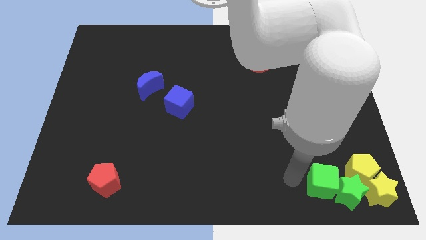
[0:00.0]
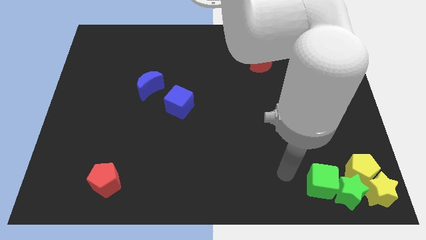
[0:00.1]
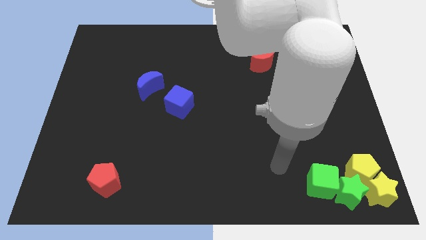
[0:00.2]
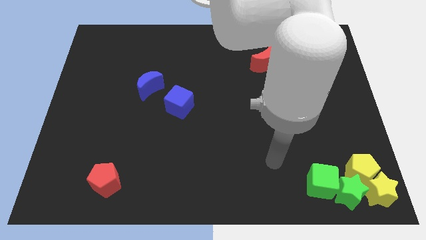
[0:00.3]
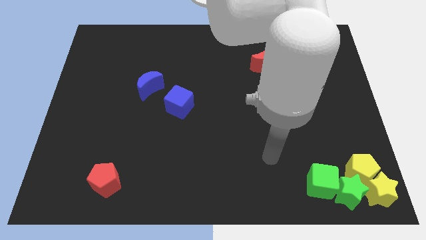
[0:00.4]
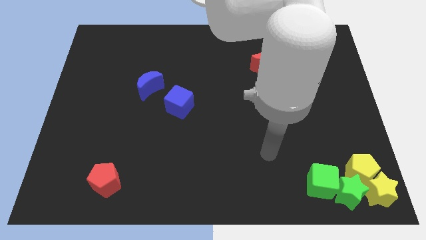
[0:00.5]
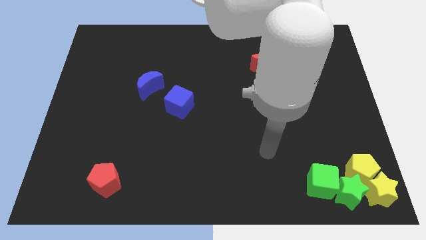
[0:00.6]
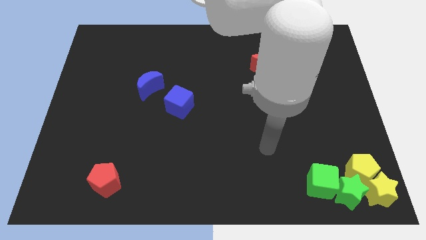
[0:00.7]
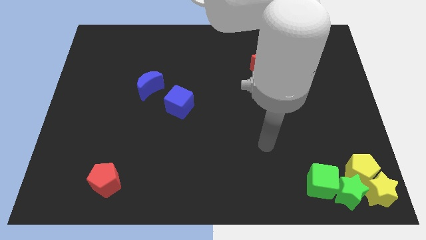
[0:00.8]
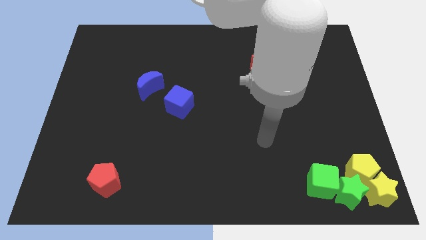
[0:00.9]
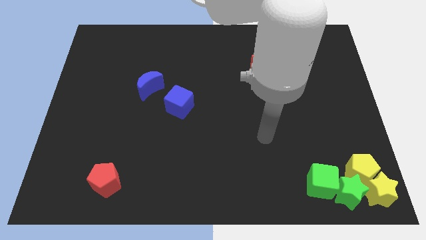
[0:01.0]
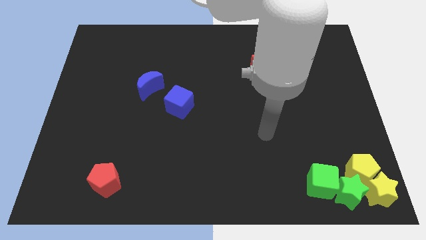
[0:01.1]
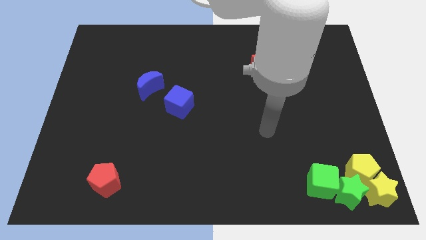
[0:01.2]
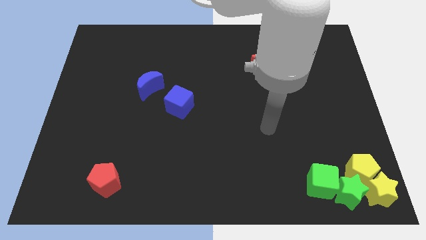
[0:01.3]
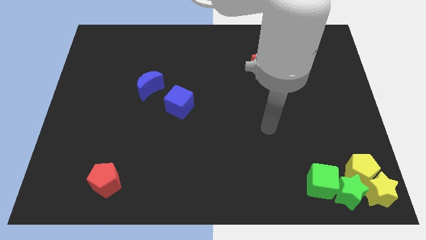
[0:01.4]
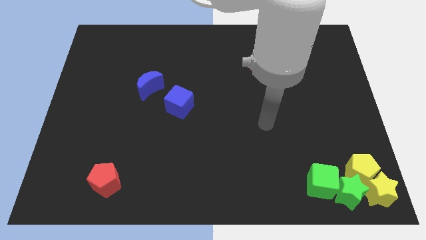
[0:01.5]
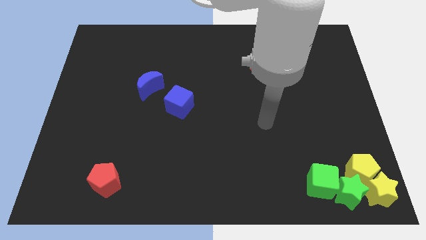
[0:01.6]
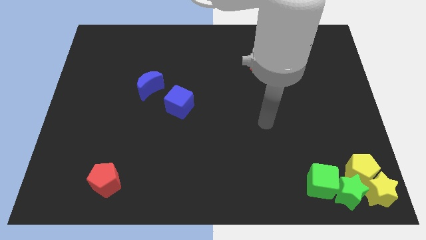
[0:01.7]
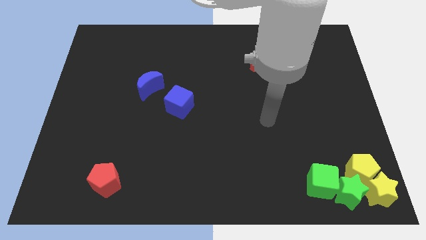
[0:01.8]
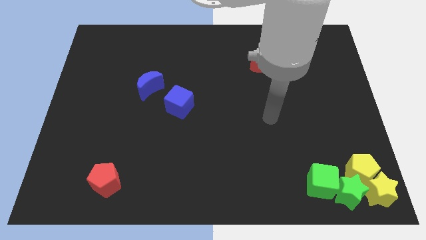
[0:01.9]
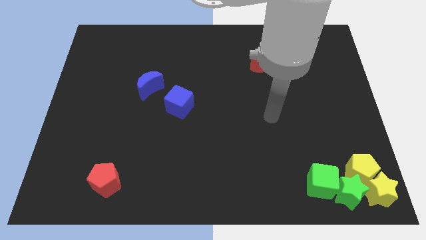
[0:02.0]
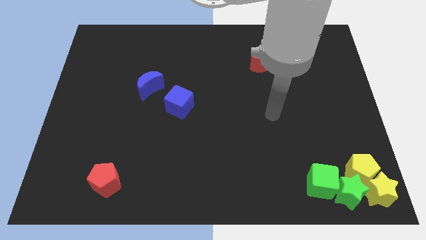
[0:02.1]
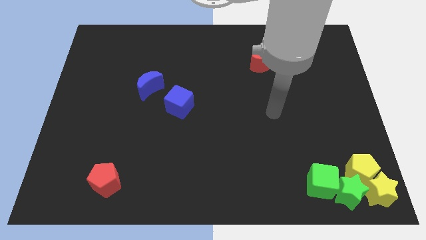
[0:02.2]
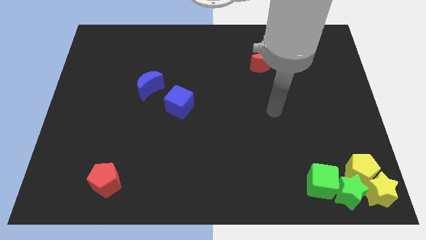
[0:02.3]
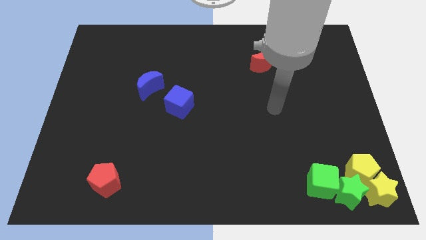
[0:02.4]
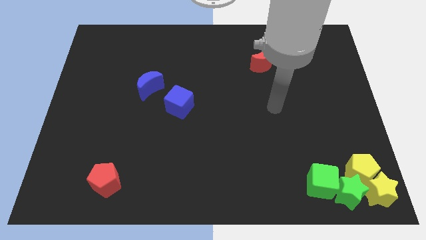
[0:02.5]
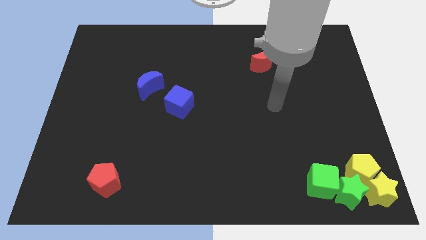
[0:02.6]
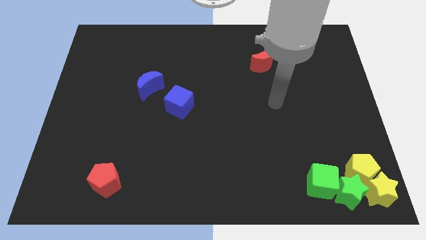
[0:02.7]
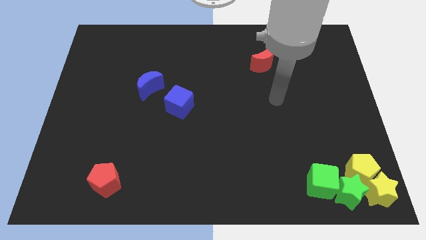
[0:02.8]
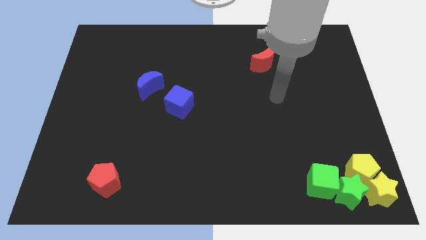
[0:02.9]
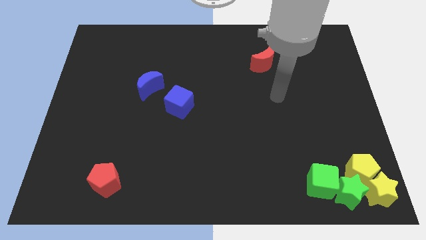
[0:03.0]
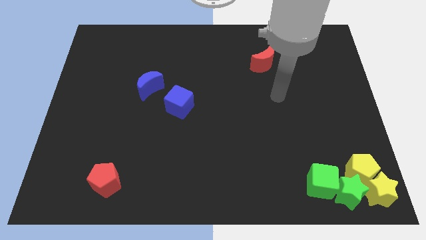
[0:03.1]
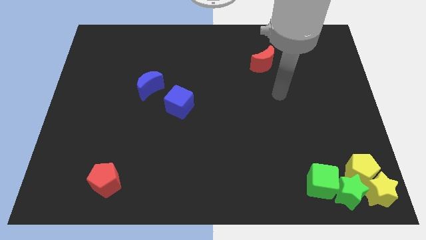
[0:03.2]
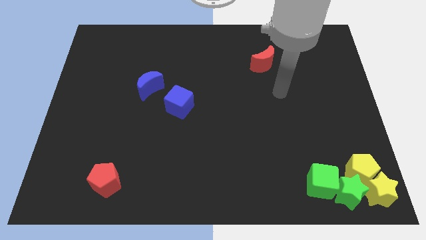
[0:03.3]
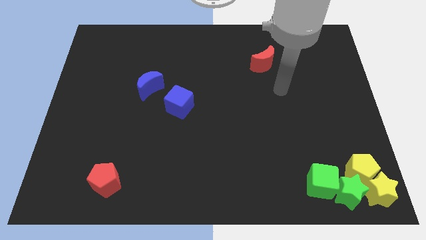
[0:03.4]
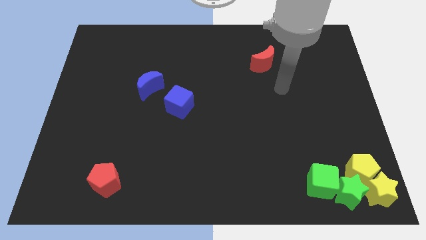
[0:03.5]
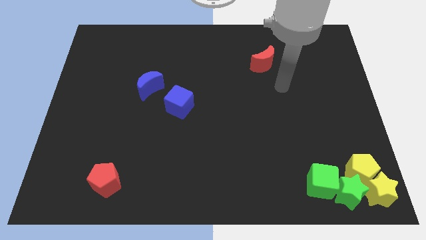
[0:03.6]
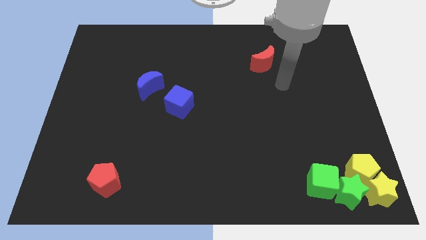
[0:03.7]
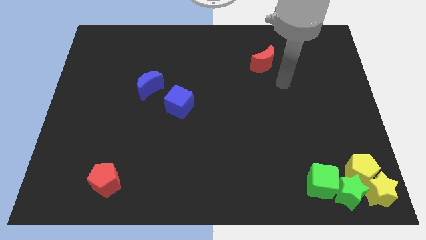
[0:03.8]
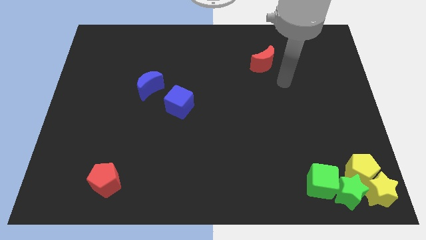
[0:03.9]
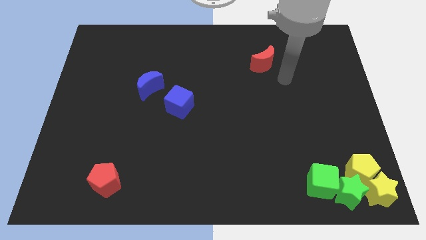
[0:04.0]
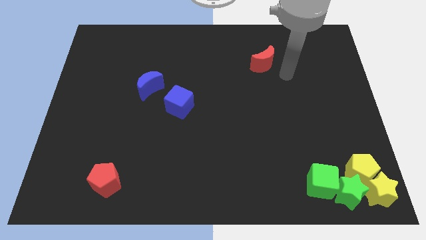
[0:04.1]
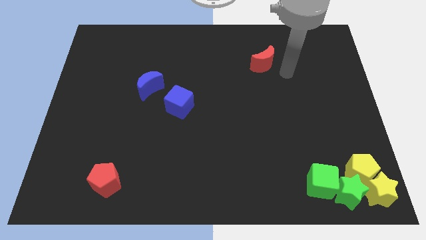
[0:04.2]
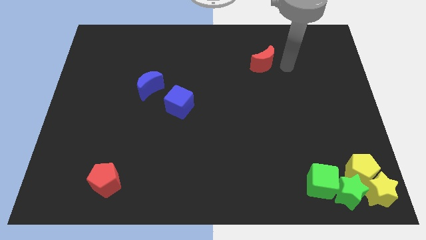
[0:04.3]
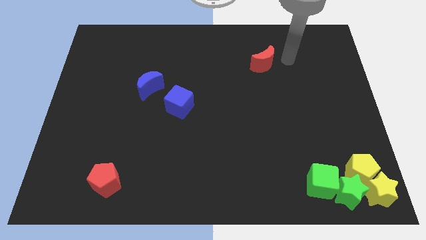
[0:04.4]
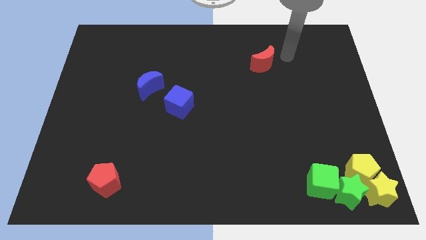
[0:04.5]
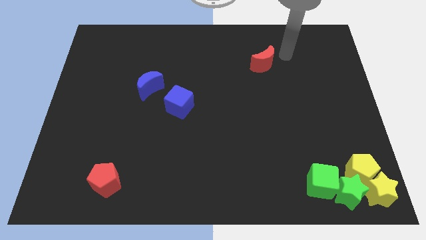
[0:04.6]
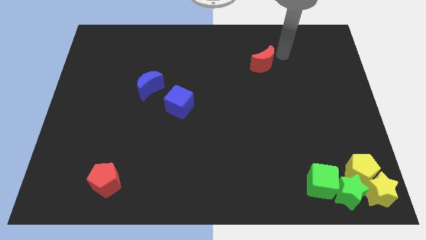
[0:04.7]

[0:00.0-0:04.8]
move your arm towards the red crescent

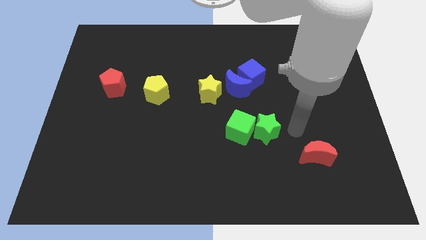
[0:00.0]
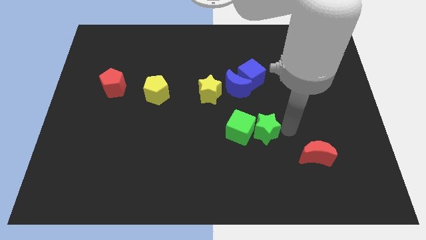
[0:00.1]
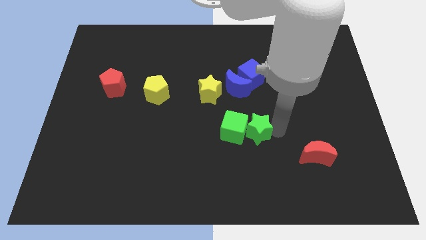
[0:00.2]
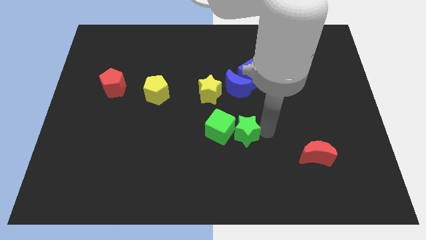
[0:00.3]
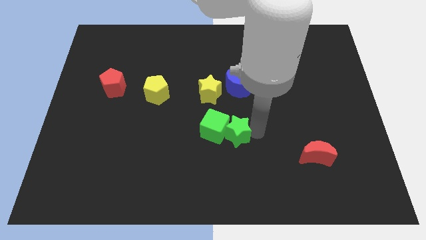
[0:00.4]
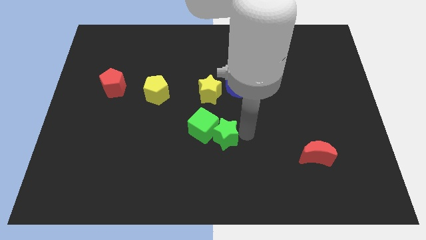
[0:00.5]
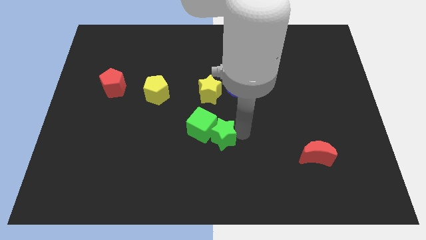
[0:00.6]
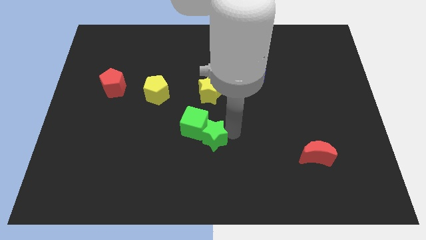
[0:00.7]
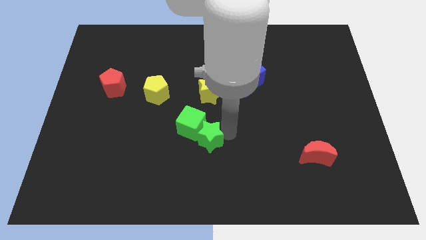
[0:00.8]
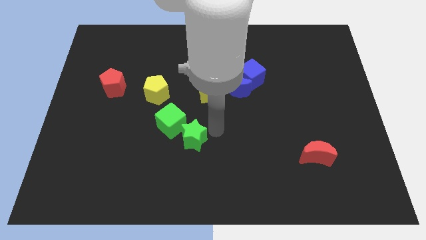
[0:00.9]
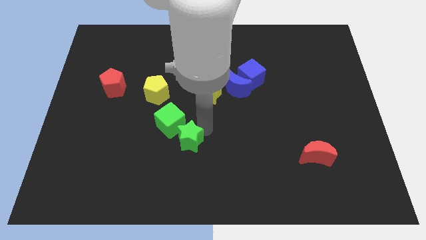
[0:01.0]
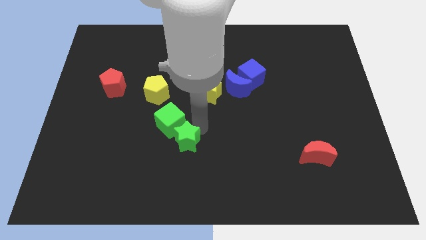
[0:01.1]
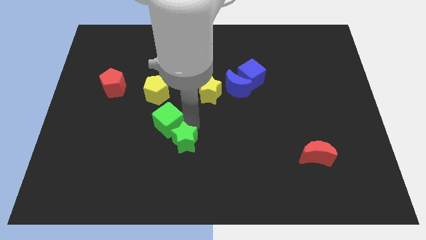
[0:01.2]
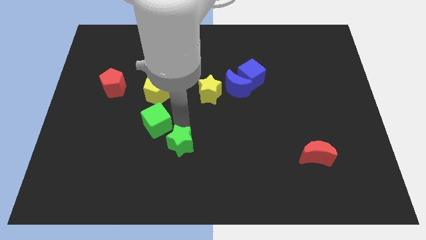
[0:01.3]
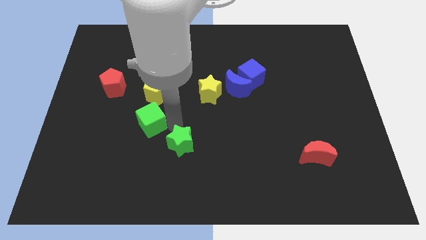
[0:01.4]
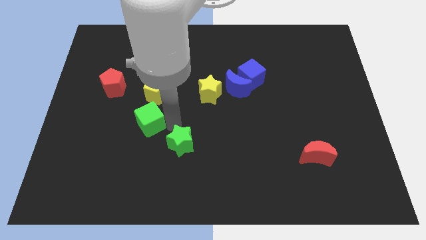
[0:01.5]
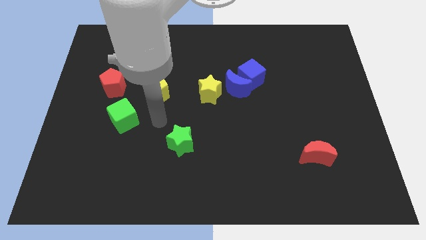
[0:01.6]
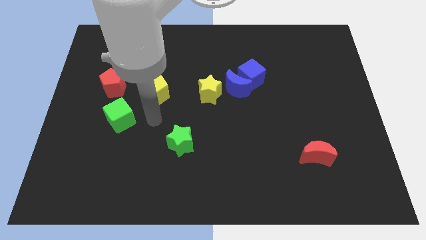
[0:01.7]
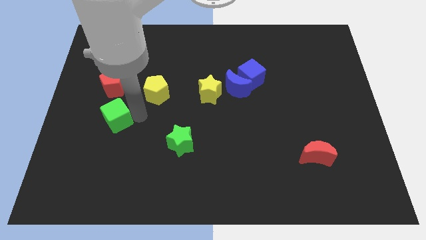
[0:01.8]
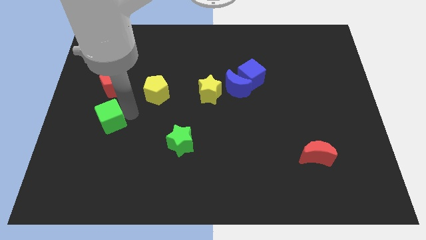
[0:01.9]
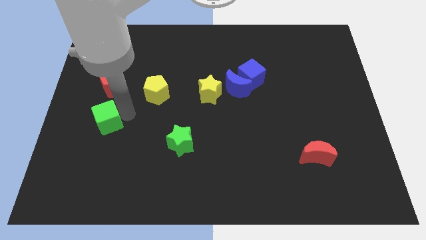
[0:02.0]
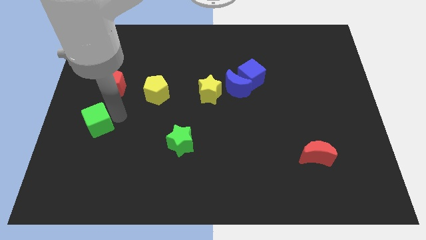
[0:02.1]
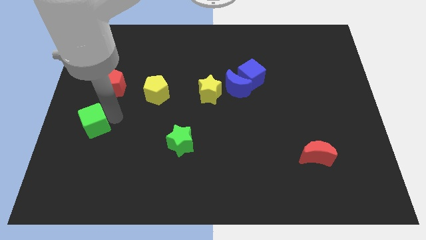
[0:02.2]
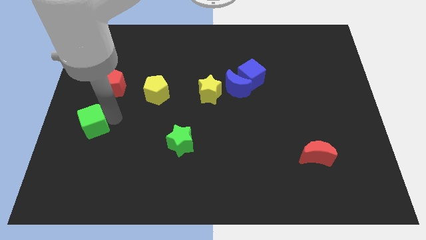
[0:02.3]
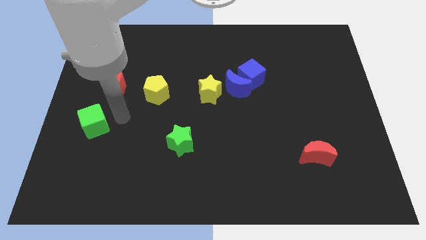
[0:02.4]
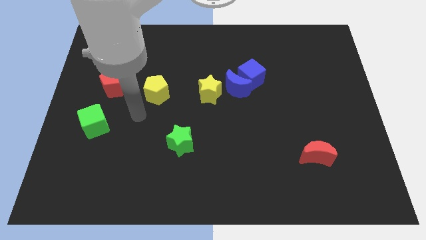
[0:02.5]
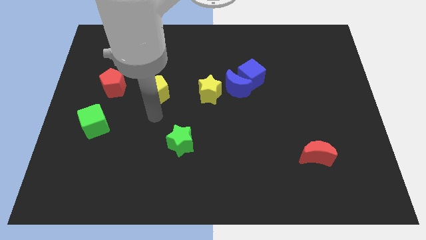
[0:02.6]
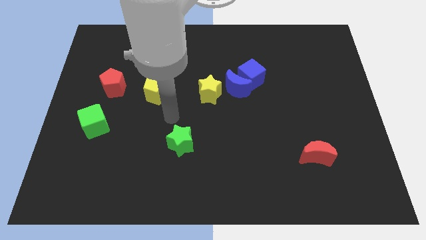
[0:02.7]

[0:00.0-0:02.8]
push the green cube towards the center left

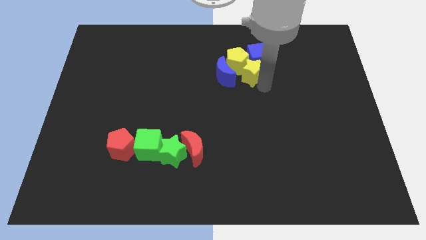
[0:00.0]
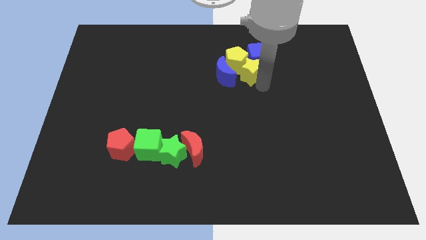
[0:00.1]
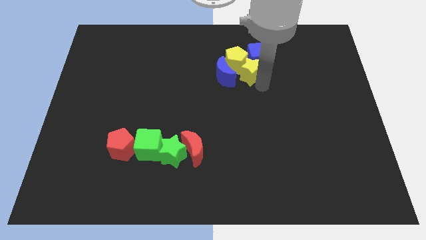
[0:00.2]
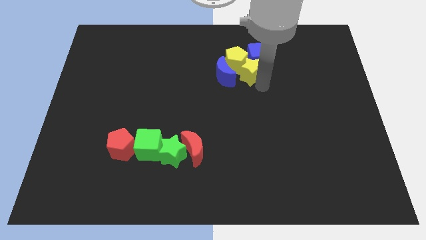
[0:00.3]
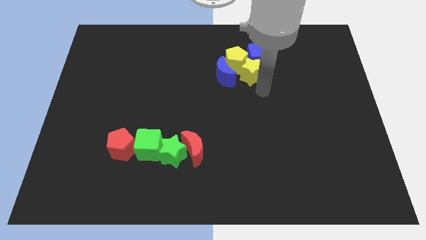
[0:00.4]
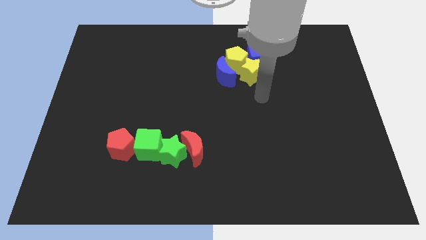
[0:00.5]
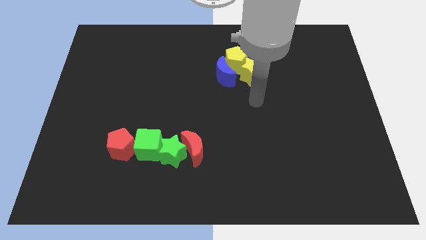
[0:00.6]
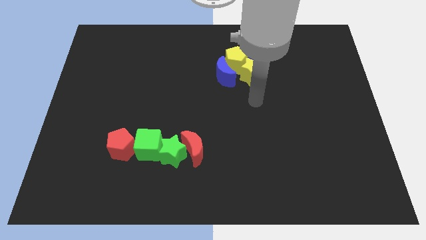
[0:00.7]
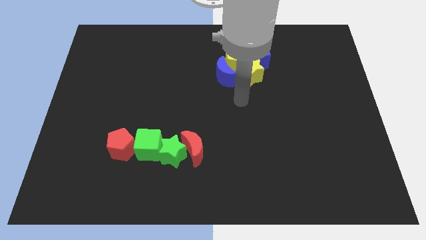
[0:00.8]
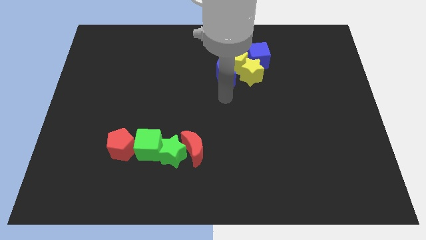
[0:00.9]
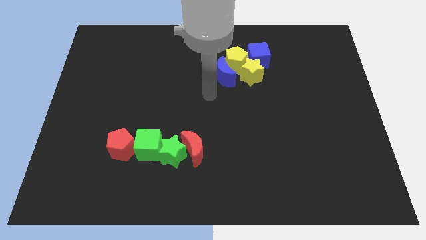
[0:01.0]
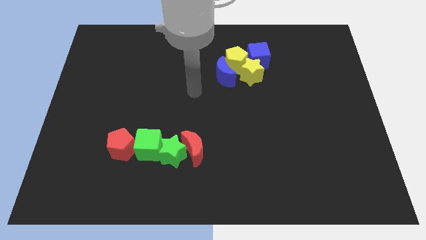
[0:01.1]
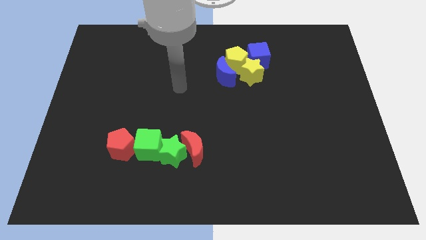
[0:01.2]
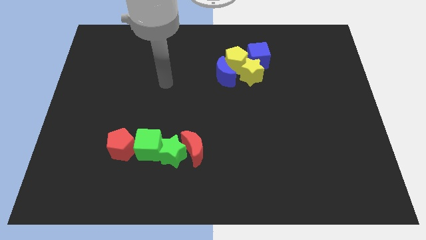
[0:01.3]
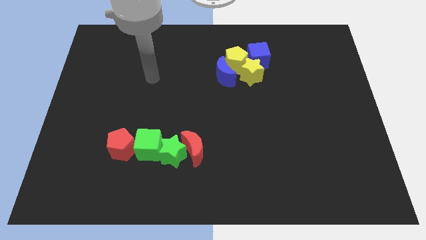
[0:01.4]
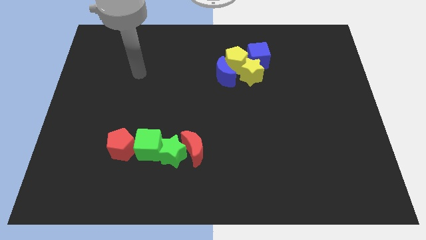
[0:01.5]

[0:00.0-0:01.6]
move the arm away from the yellow star
